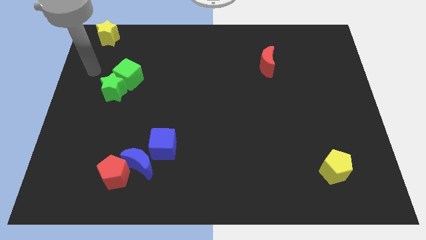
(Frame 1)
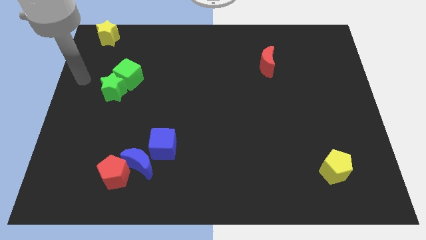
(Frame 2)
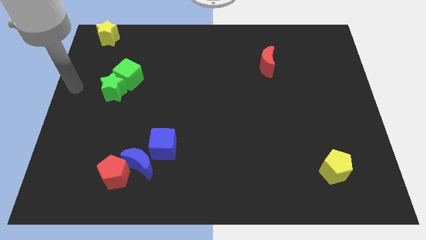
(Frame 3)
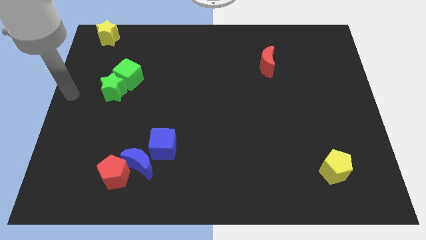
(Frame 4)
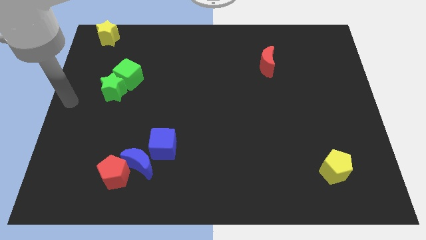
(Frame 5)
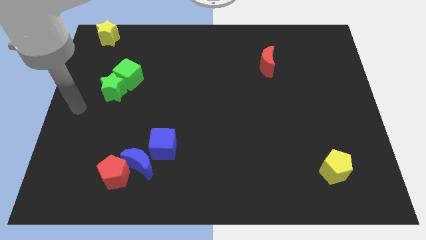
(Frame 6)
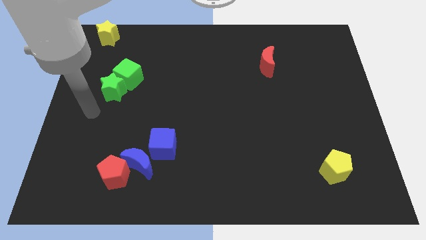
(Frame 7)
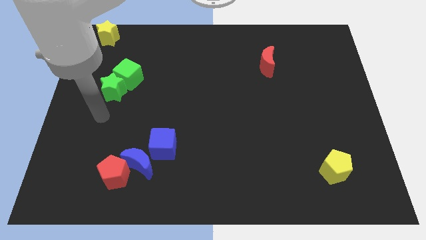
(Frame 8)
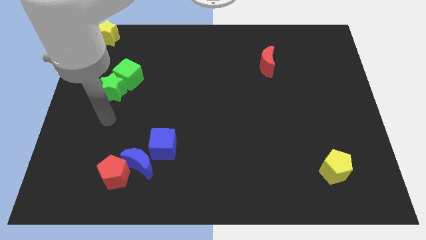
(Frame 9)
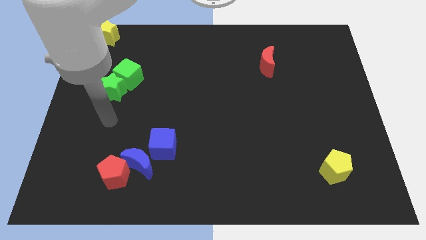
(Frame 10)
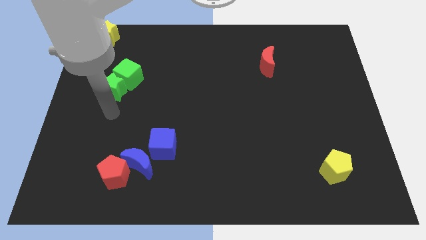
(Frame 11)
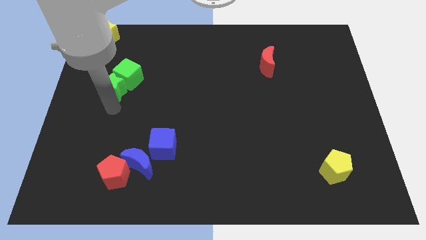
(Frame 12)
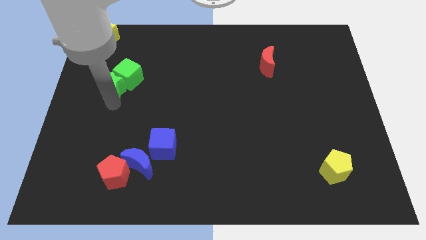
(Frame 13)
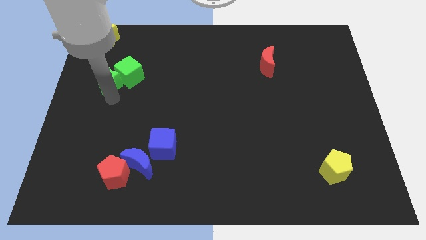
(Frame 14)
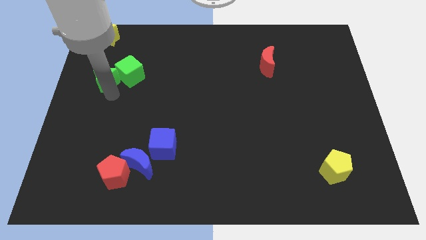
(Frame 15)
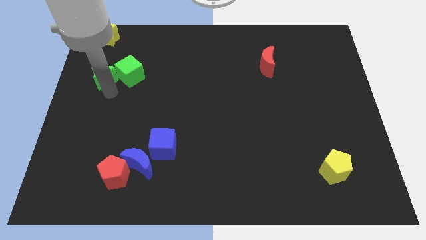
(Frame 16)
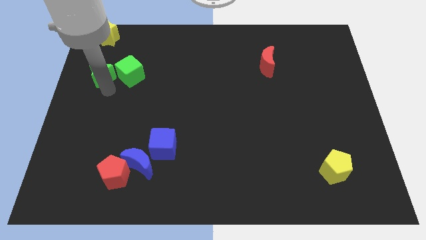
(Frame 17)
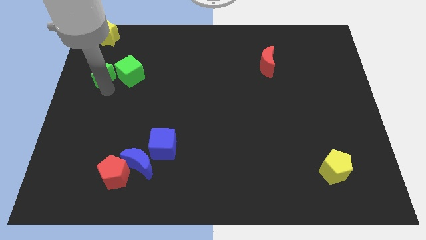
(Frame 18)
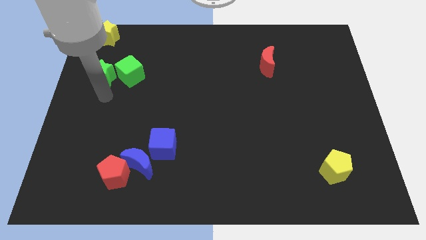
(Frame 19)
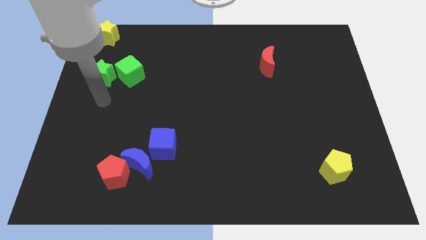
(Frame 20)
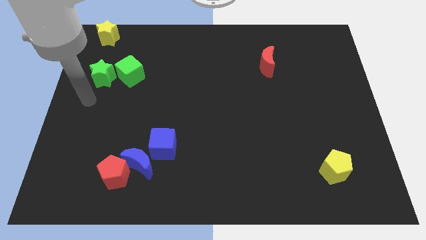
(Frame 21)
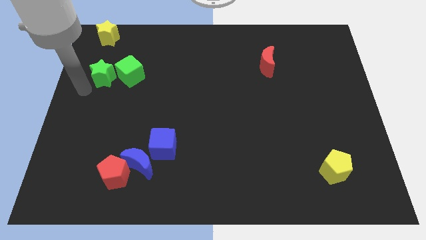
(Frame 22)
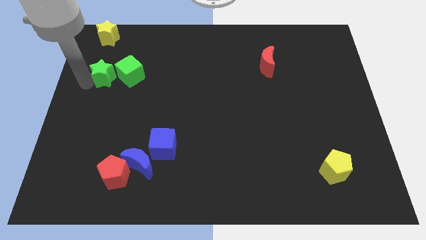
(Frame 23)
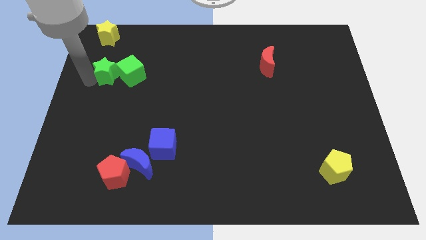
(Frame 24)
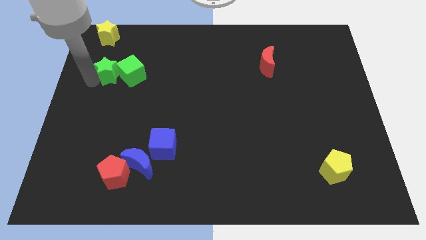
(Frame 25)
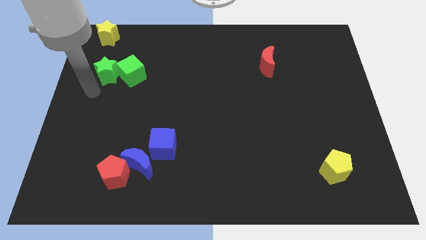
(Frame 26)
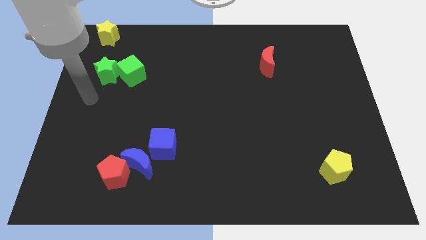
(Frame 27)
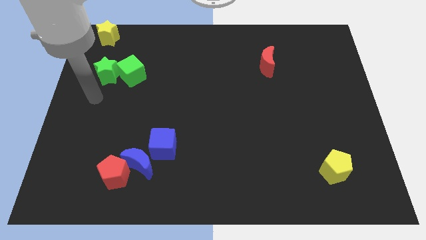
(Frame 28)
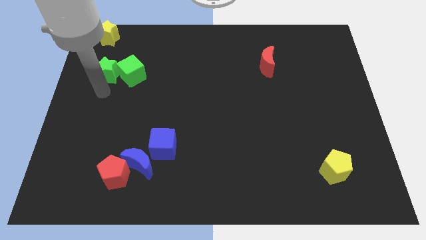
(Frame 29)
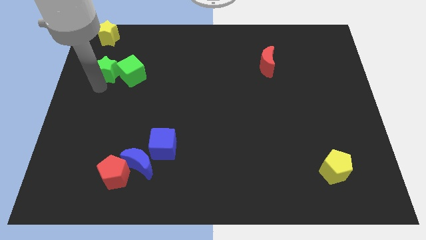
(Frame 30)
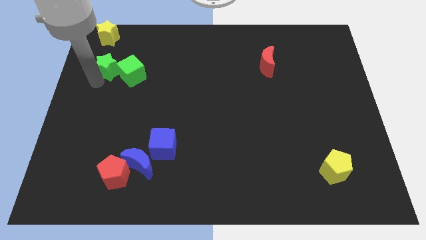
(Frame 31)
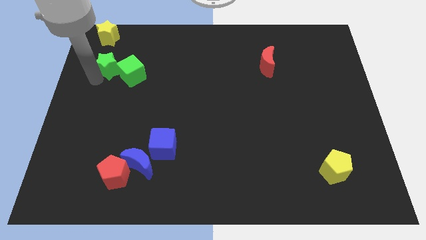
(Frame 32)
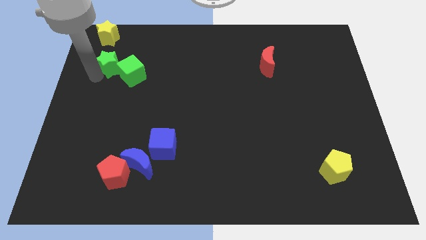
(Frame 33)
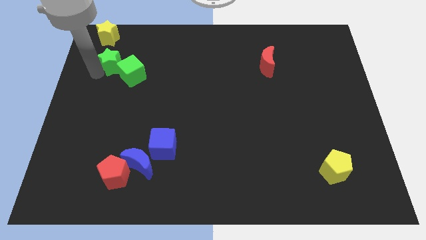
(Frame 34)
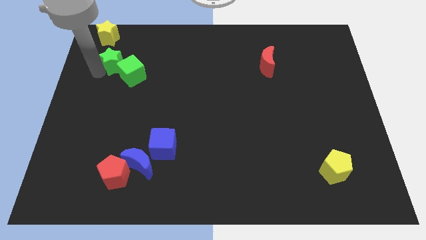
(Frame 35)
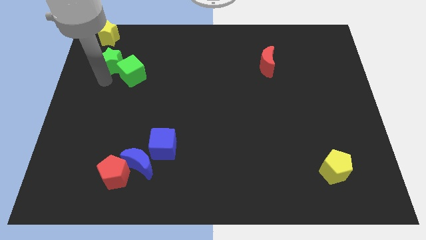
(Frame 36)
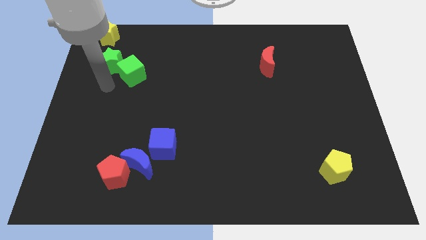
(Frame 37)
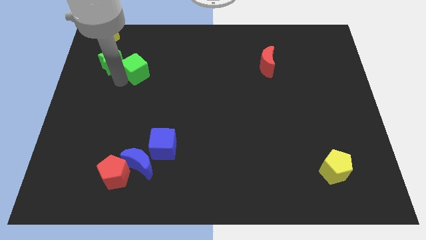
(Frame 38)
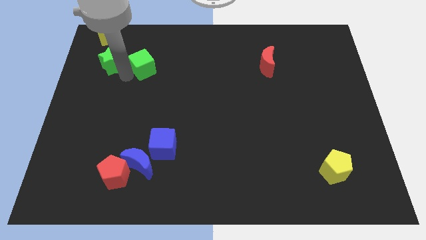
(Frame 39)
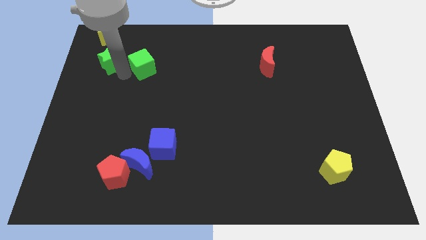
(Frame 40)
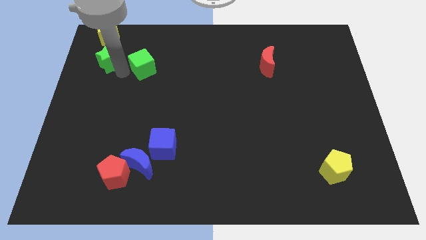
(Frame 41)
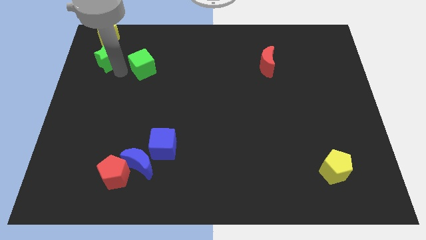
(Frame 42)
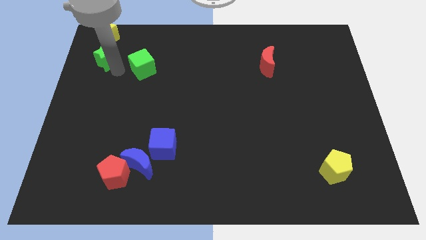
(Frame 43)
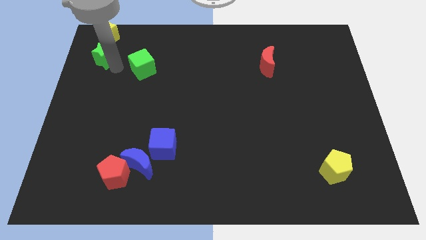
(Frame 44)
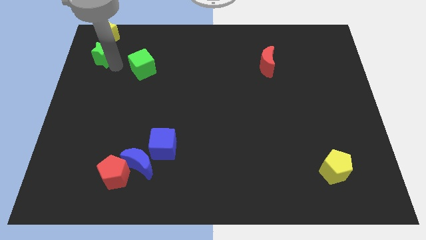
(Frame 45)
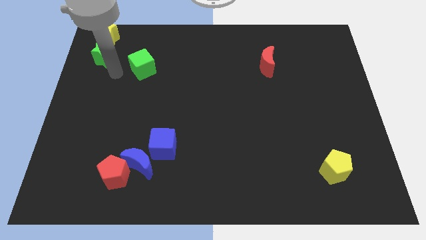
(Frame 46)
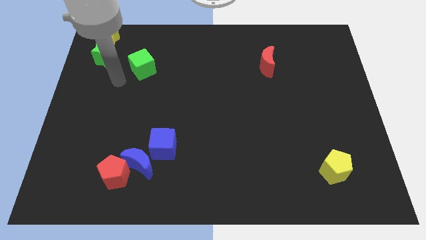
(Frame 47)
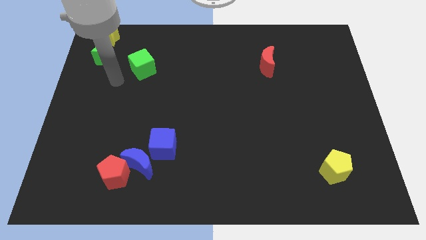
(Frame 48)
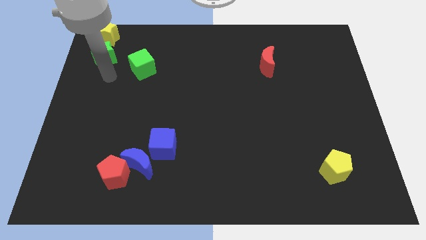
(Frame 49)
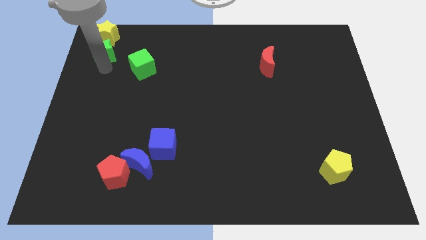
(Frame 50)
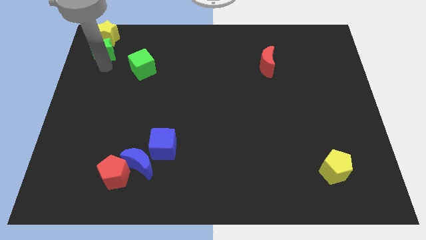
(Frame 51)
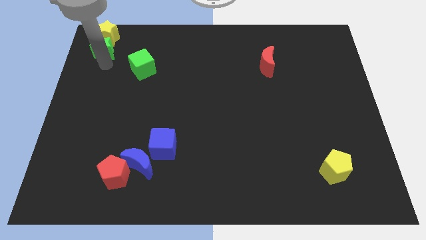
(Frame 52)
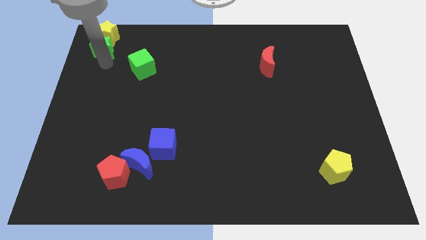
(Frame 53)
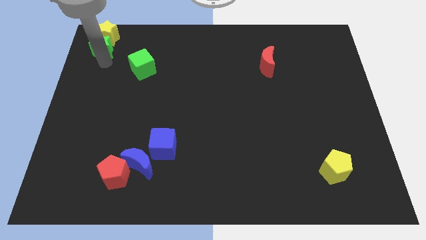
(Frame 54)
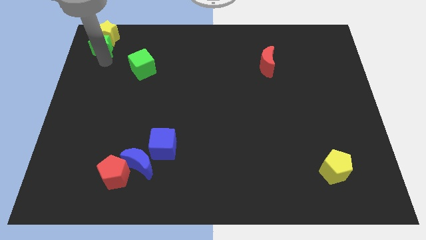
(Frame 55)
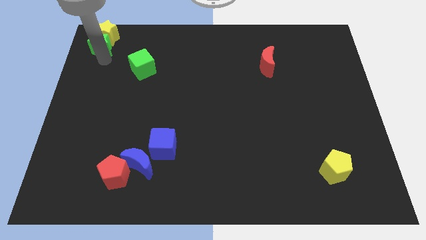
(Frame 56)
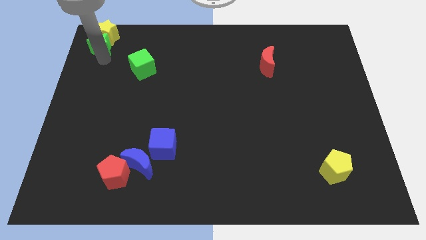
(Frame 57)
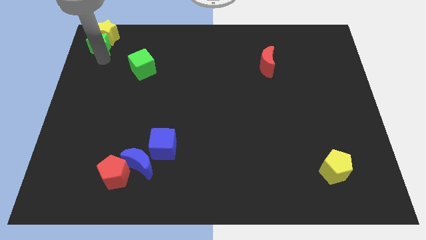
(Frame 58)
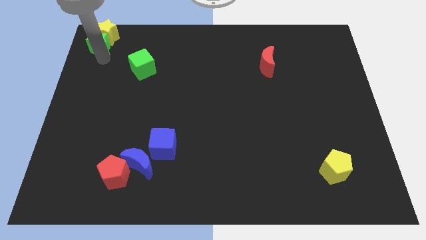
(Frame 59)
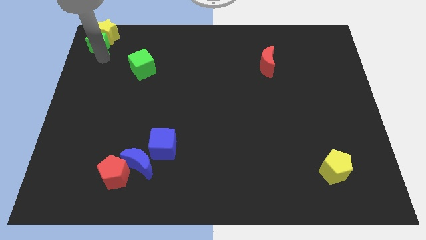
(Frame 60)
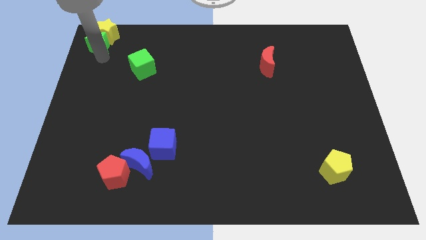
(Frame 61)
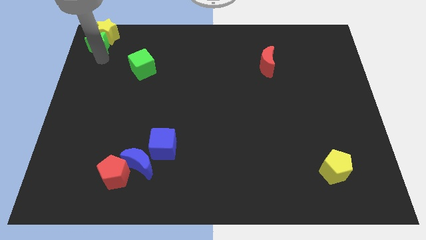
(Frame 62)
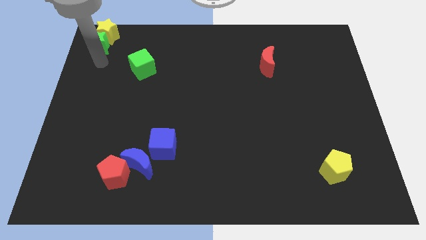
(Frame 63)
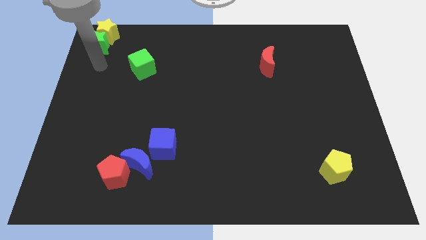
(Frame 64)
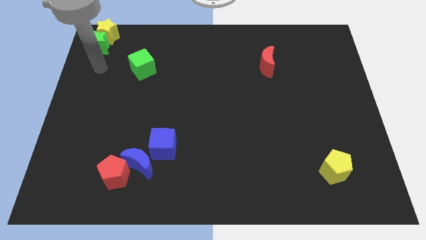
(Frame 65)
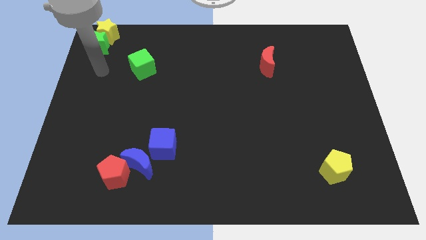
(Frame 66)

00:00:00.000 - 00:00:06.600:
push the green star into yellow star

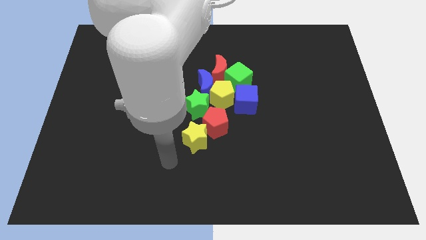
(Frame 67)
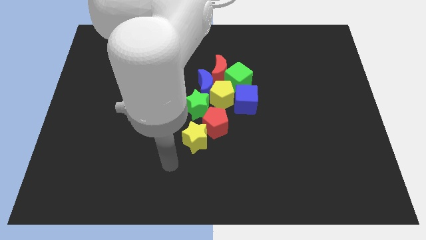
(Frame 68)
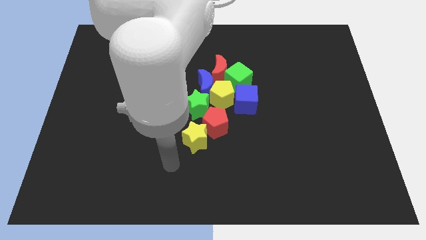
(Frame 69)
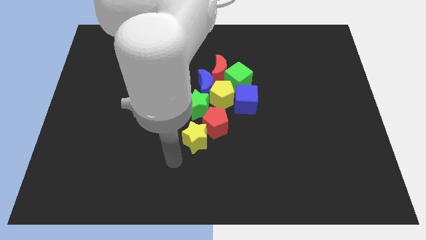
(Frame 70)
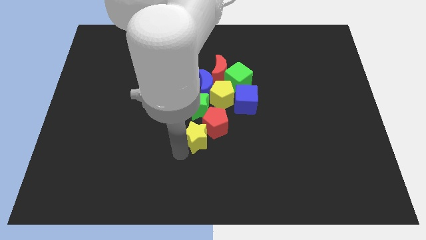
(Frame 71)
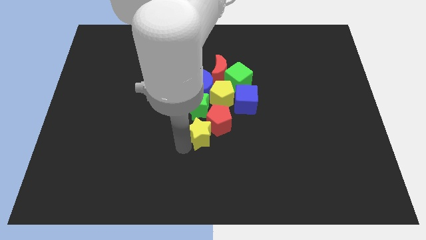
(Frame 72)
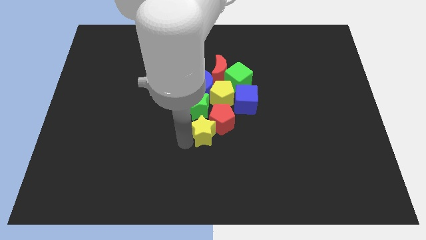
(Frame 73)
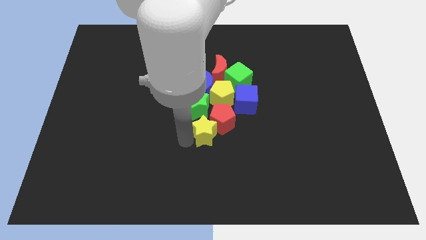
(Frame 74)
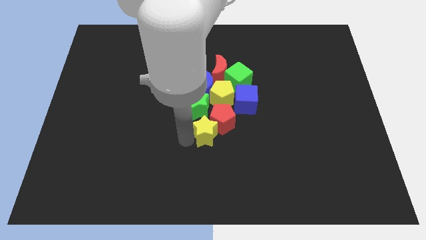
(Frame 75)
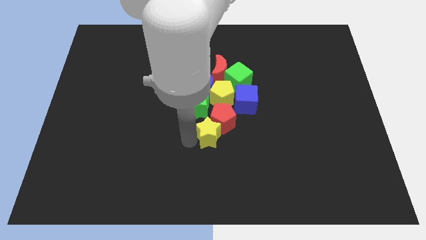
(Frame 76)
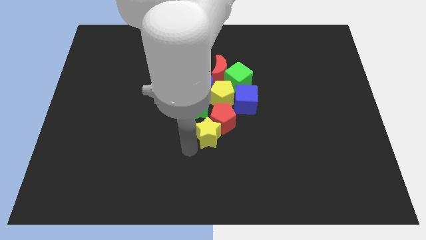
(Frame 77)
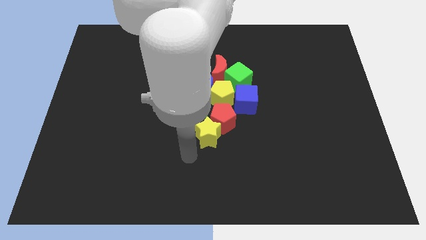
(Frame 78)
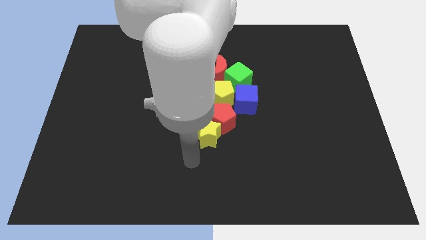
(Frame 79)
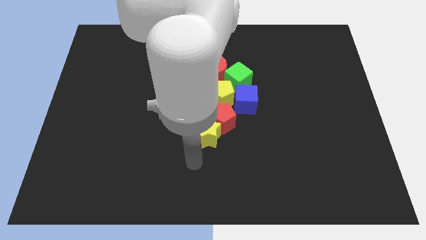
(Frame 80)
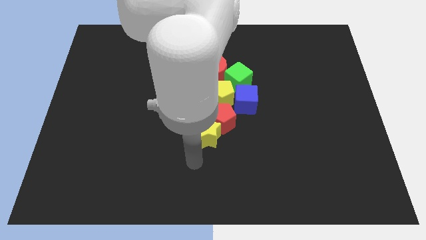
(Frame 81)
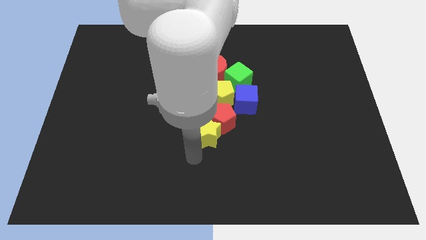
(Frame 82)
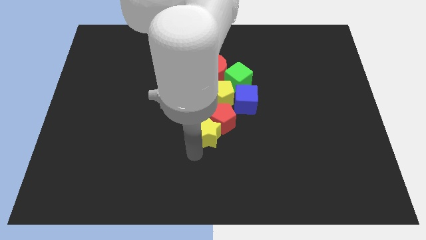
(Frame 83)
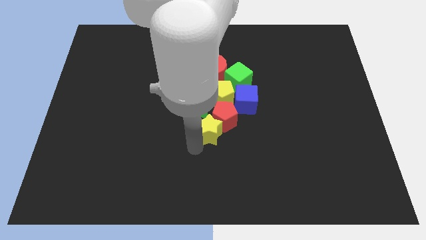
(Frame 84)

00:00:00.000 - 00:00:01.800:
move the red pentagon upwards with the yellow star

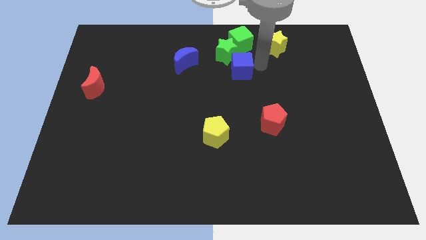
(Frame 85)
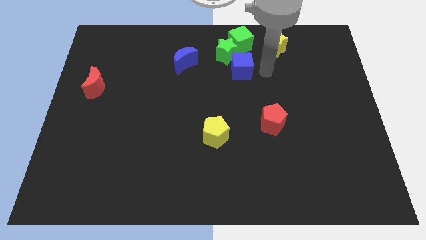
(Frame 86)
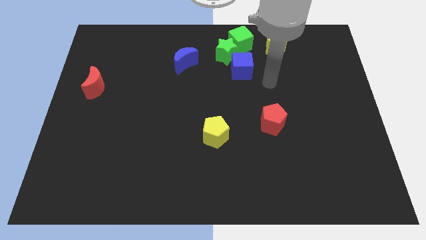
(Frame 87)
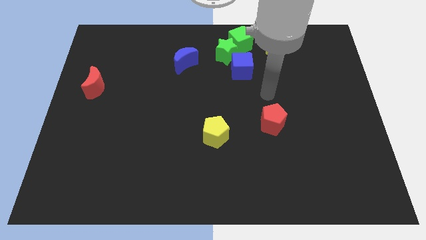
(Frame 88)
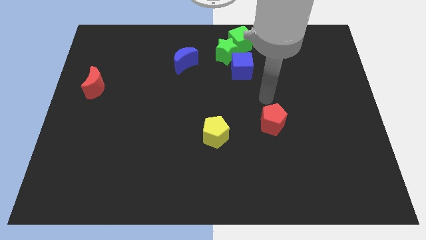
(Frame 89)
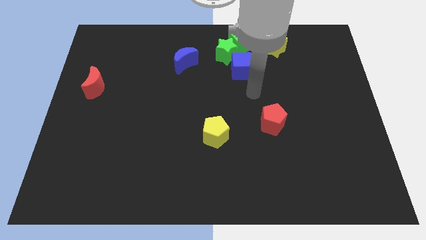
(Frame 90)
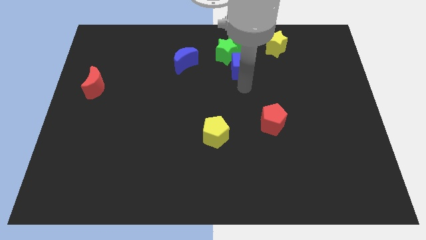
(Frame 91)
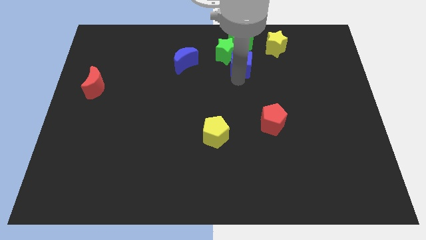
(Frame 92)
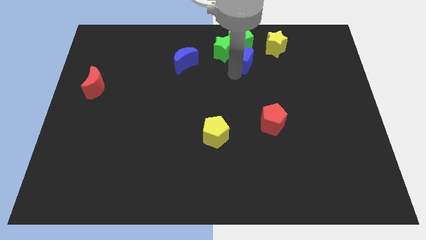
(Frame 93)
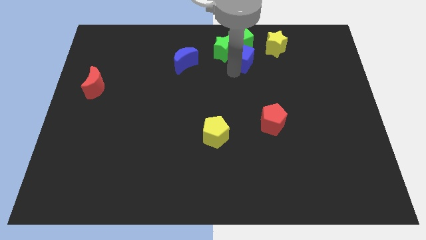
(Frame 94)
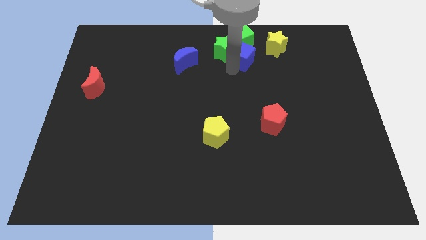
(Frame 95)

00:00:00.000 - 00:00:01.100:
push the blue cube into the green cube
